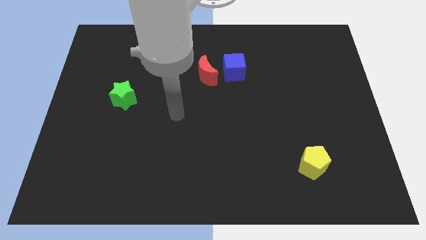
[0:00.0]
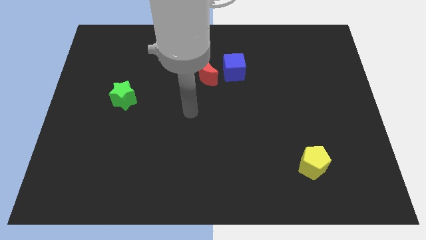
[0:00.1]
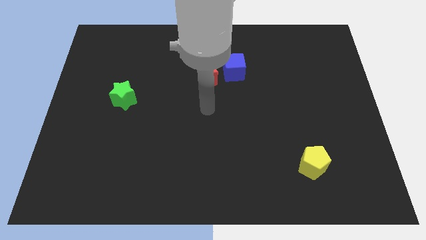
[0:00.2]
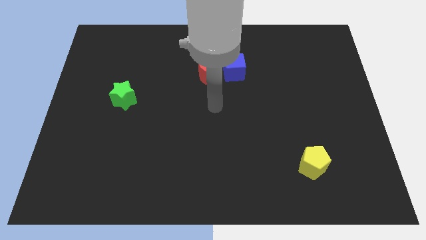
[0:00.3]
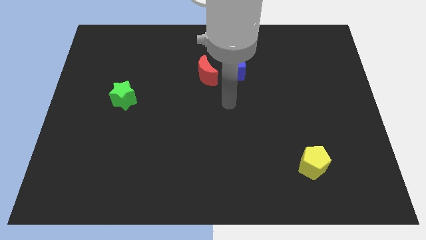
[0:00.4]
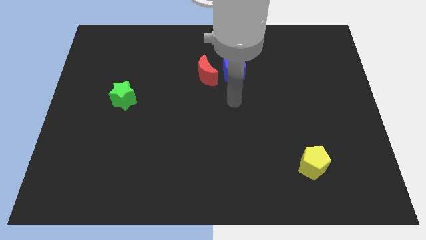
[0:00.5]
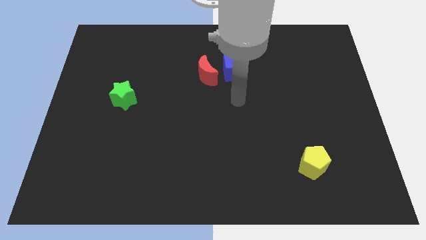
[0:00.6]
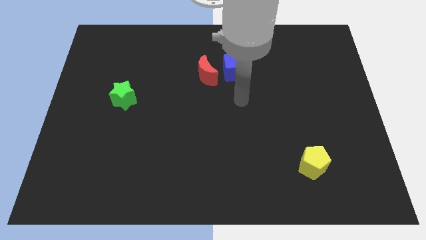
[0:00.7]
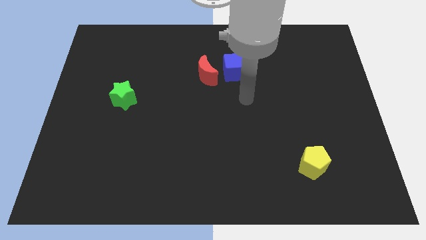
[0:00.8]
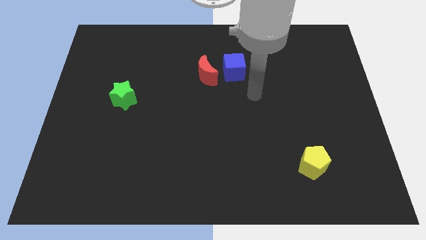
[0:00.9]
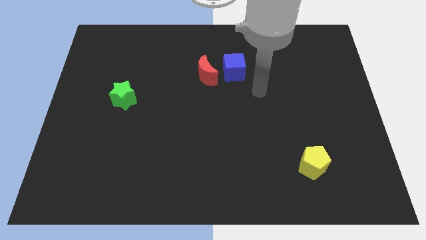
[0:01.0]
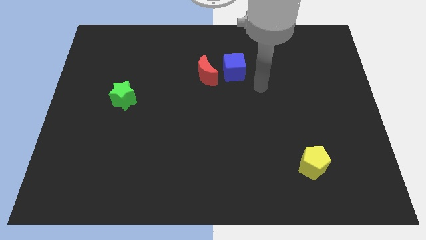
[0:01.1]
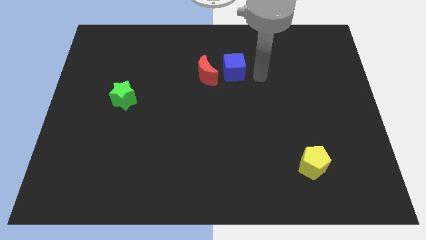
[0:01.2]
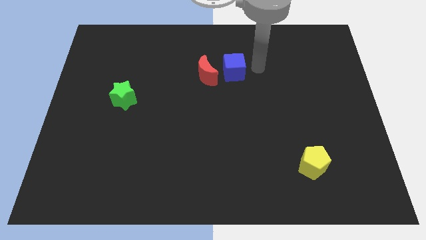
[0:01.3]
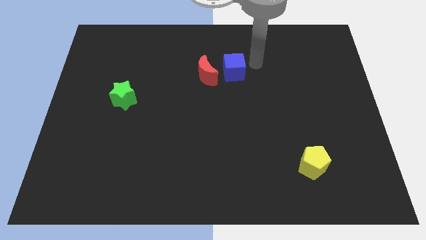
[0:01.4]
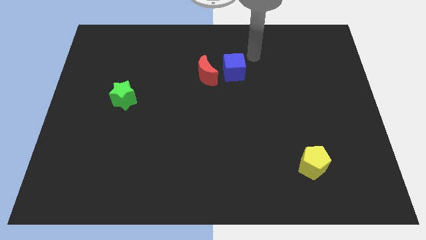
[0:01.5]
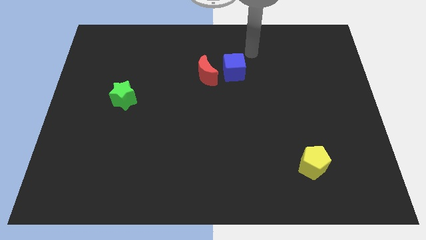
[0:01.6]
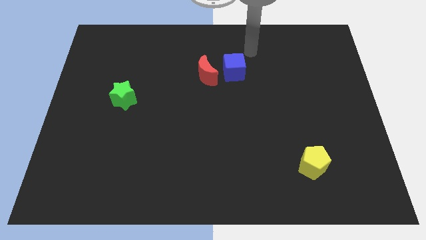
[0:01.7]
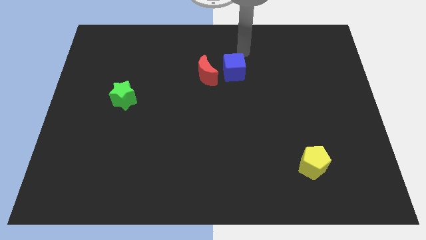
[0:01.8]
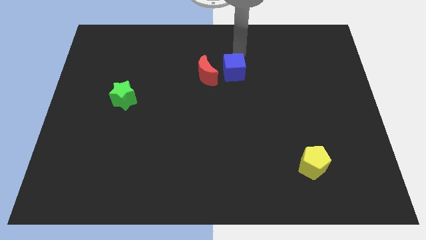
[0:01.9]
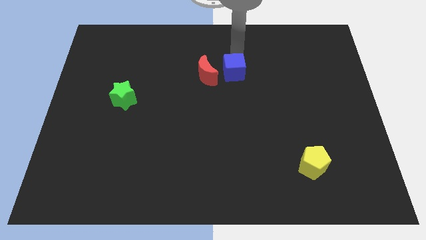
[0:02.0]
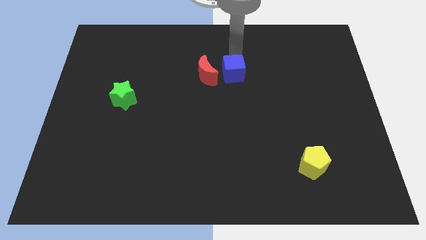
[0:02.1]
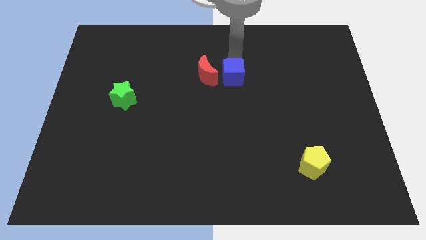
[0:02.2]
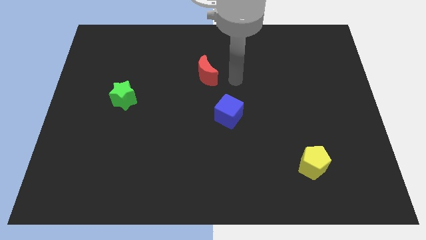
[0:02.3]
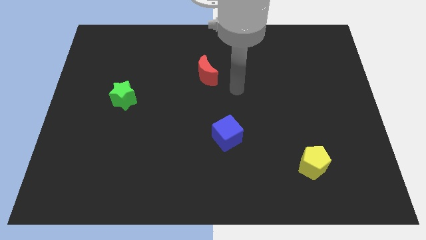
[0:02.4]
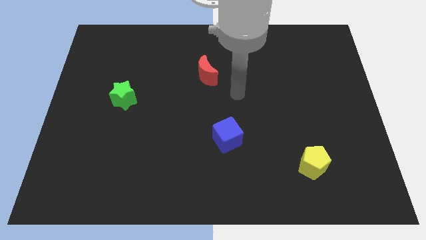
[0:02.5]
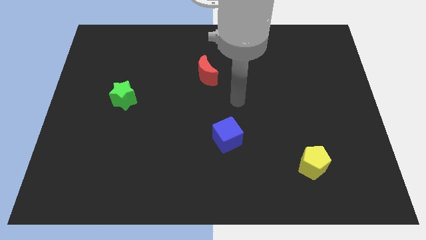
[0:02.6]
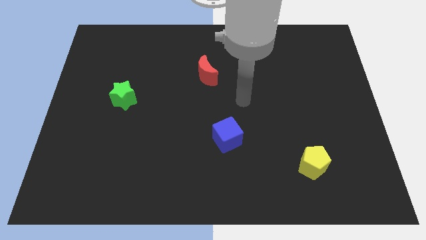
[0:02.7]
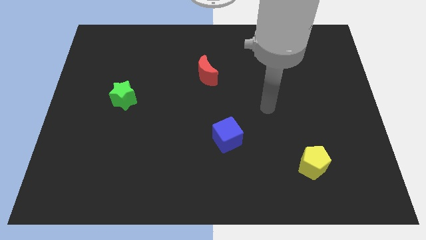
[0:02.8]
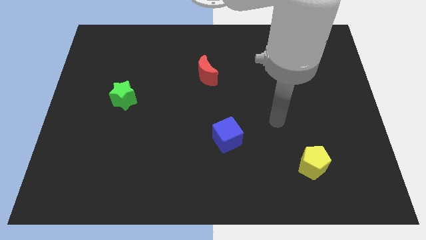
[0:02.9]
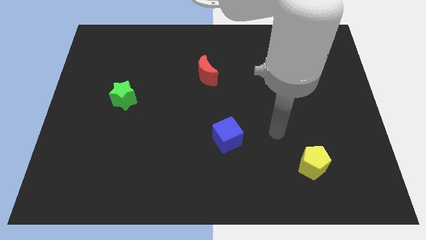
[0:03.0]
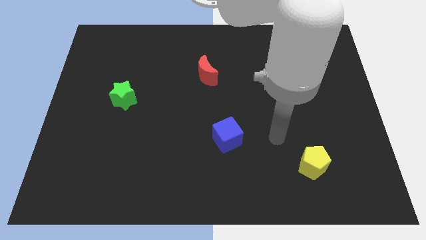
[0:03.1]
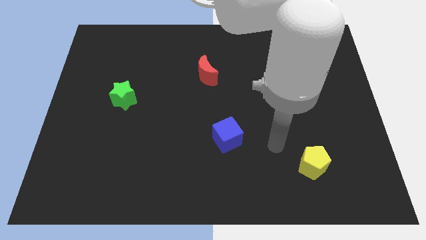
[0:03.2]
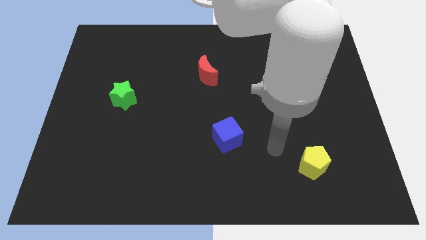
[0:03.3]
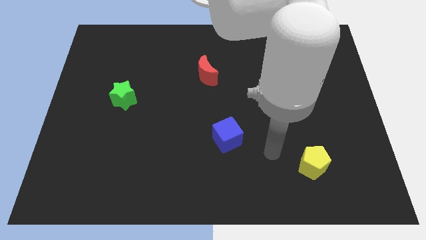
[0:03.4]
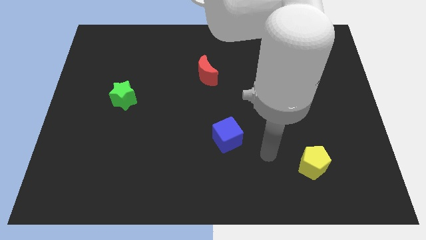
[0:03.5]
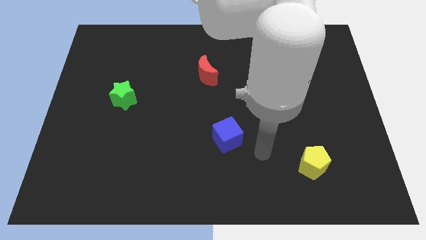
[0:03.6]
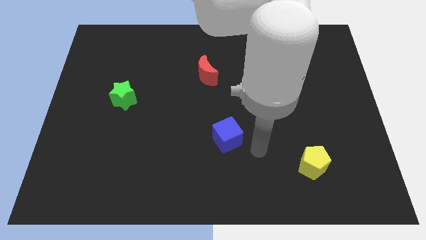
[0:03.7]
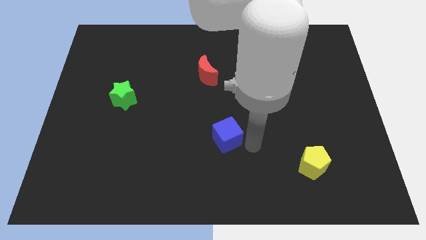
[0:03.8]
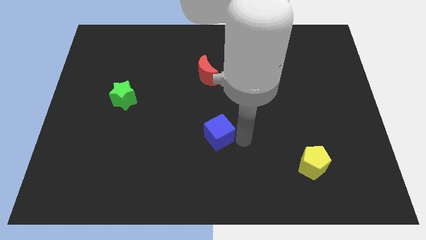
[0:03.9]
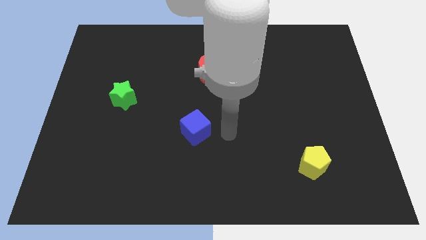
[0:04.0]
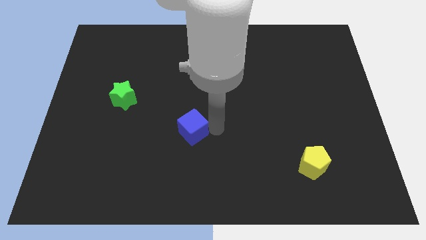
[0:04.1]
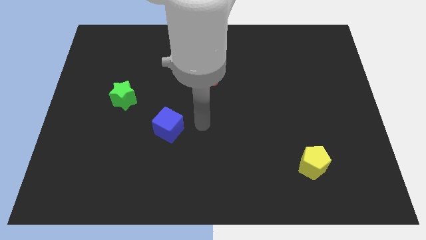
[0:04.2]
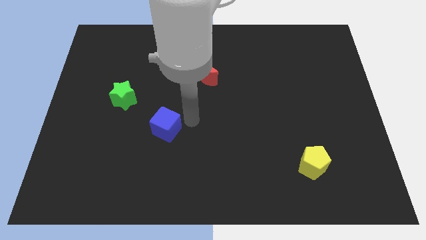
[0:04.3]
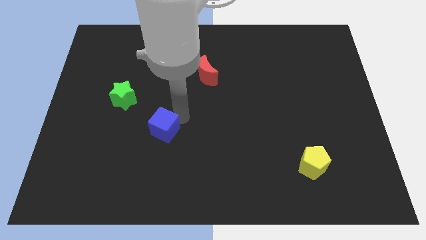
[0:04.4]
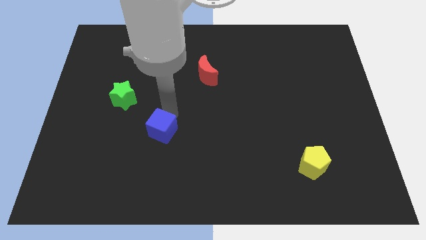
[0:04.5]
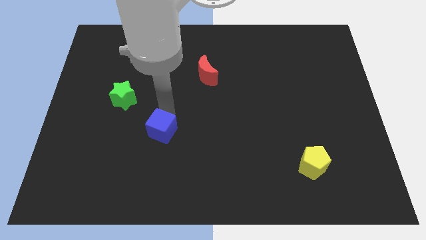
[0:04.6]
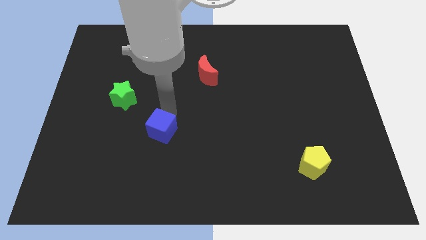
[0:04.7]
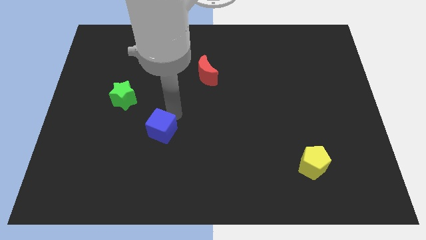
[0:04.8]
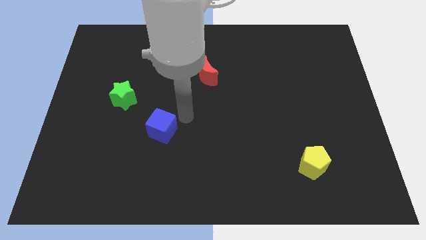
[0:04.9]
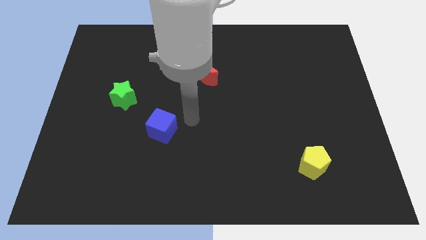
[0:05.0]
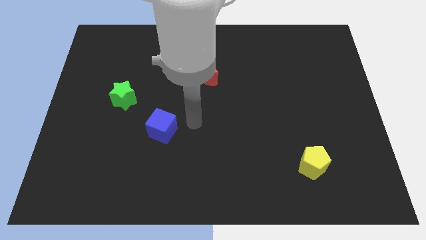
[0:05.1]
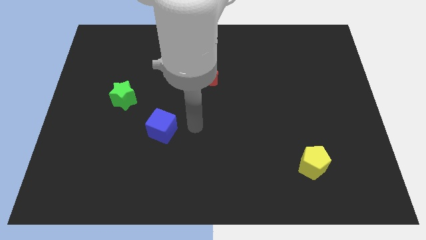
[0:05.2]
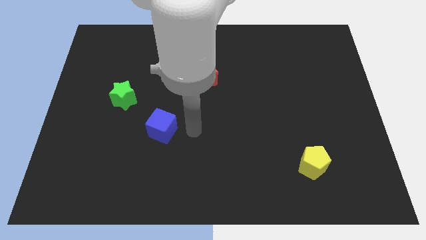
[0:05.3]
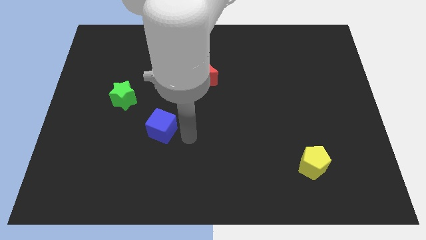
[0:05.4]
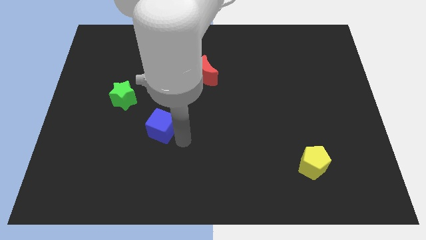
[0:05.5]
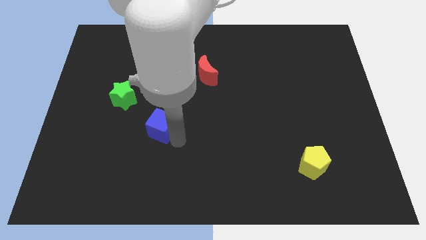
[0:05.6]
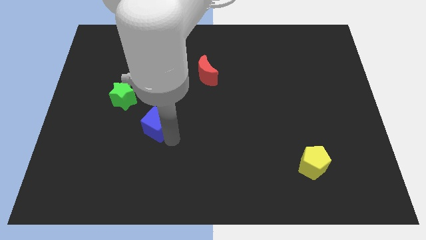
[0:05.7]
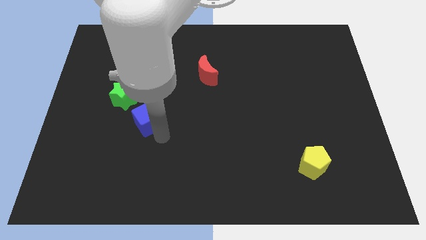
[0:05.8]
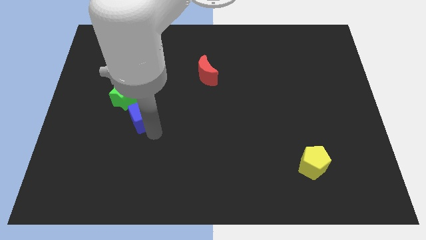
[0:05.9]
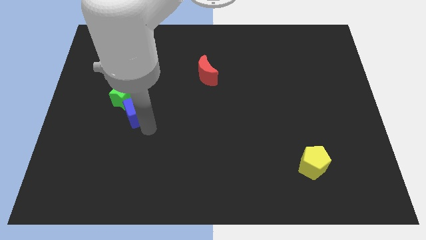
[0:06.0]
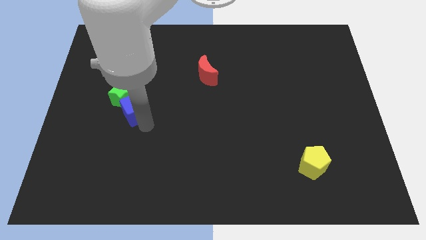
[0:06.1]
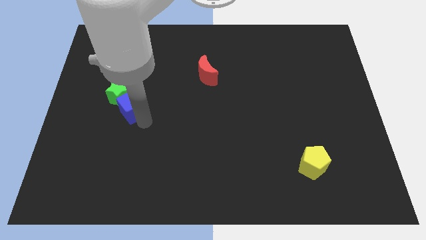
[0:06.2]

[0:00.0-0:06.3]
put the blue cube close to the green star

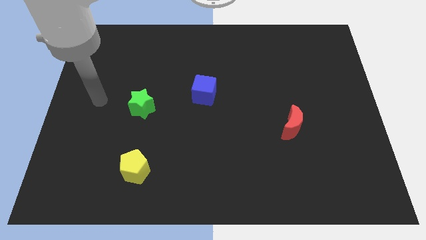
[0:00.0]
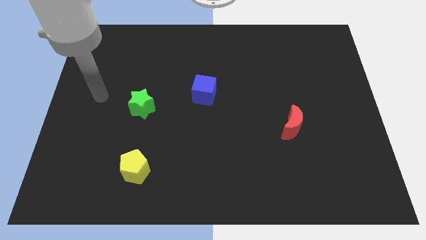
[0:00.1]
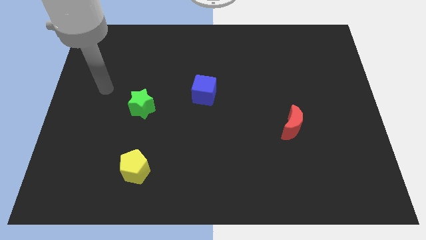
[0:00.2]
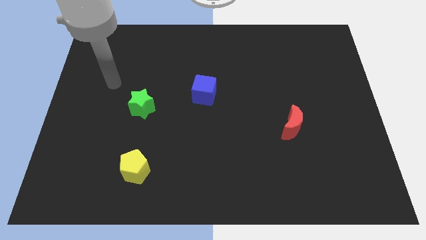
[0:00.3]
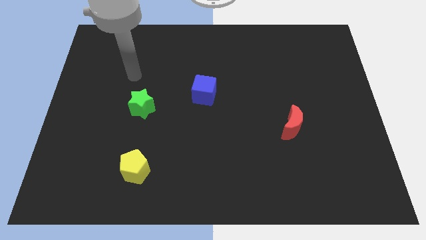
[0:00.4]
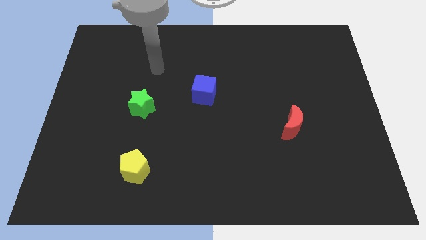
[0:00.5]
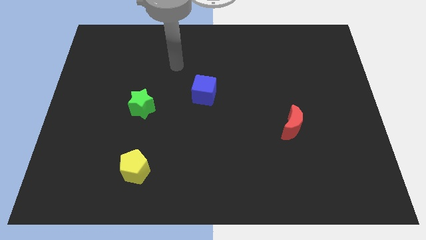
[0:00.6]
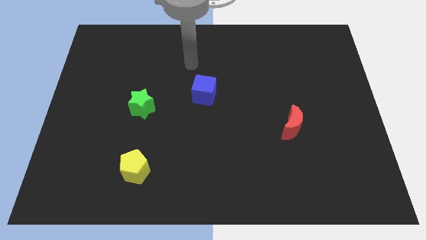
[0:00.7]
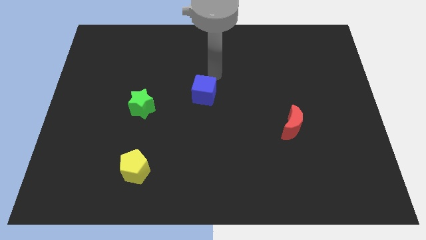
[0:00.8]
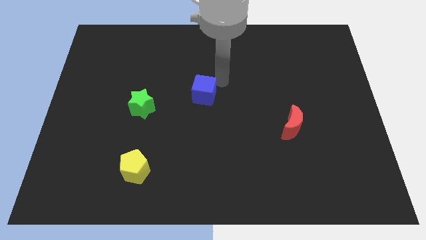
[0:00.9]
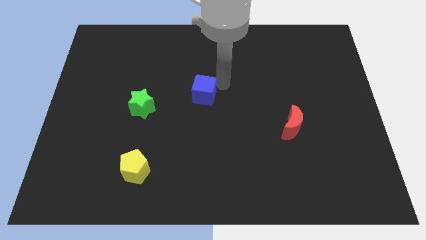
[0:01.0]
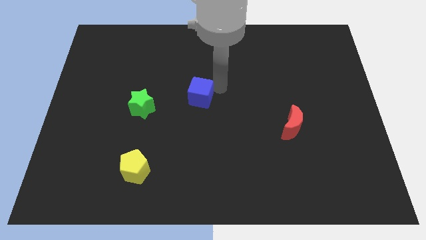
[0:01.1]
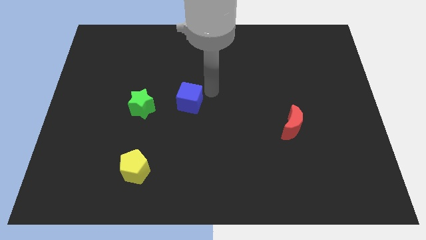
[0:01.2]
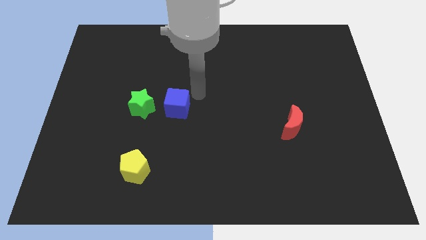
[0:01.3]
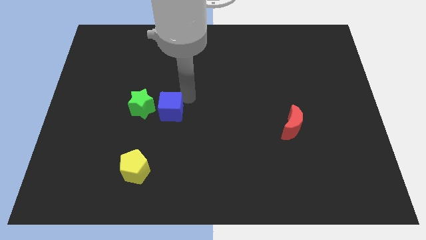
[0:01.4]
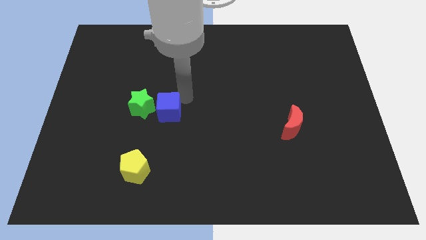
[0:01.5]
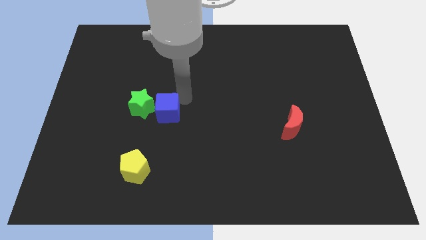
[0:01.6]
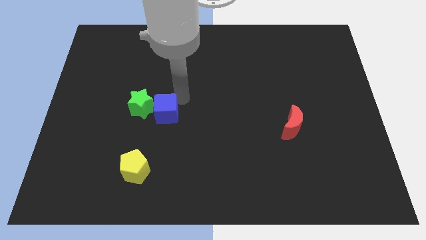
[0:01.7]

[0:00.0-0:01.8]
slide the blue cube to the green block

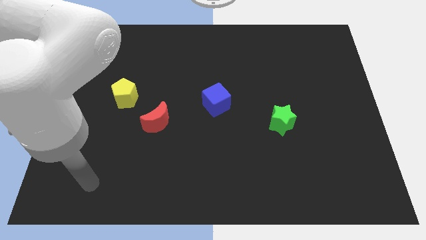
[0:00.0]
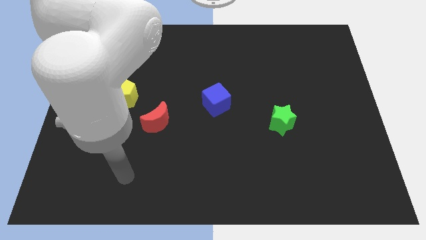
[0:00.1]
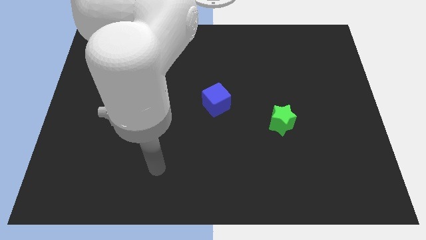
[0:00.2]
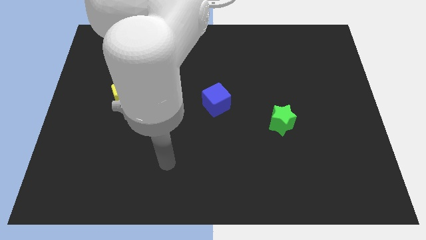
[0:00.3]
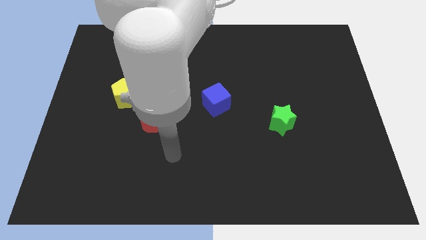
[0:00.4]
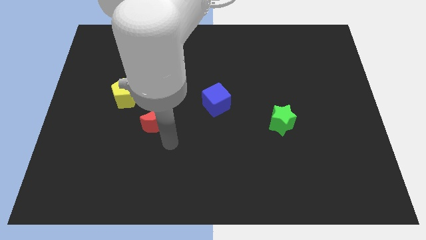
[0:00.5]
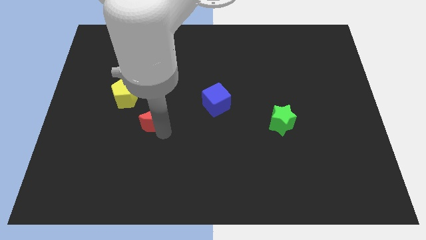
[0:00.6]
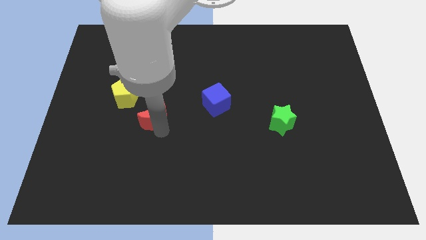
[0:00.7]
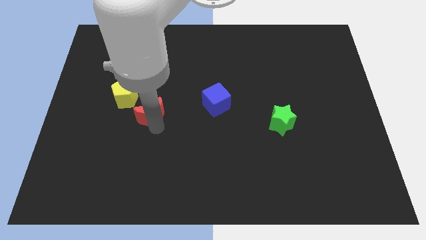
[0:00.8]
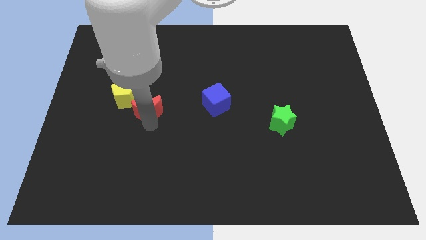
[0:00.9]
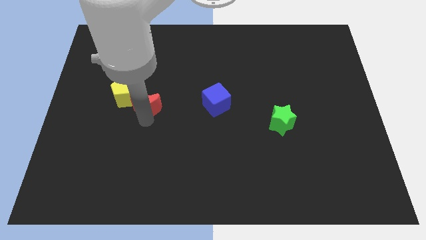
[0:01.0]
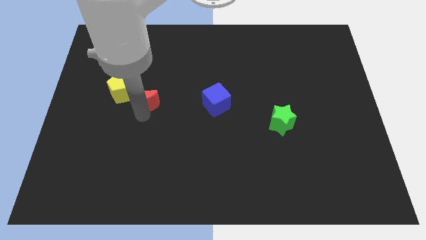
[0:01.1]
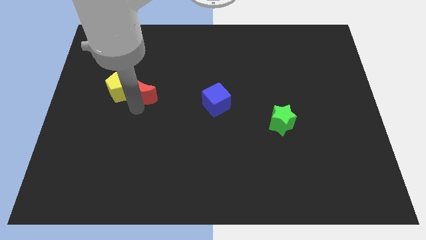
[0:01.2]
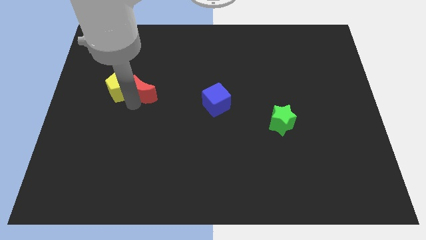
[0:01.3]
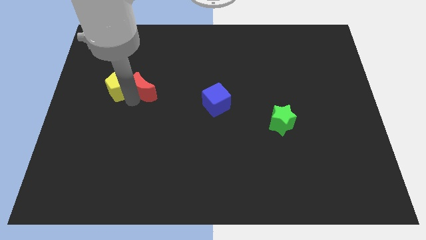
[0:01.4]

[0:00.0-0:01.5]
move the red moon to the pentagon
